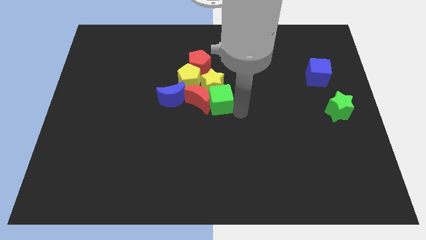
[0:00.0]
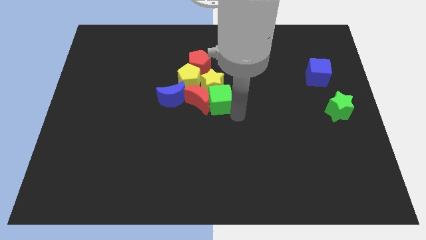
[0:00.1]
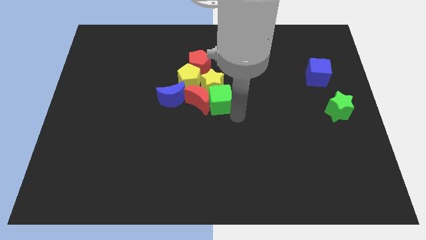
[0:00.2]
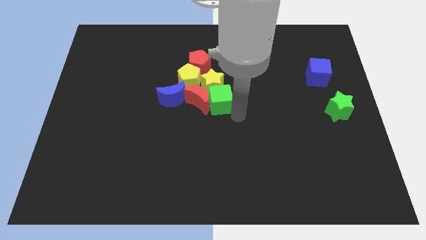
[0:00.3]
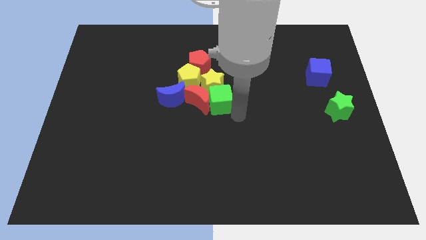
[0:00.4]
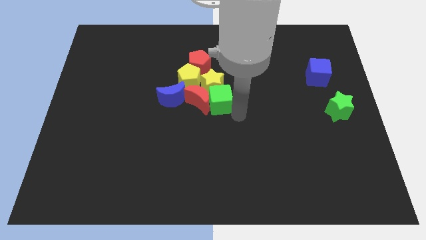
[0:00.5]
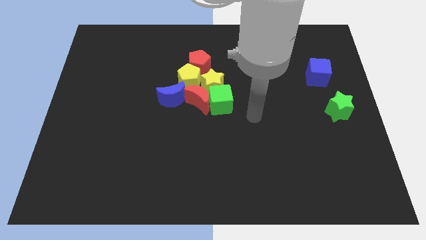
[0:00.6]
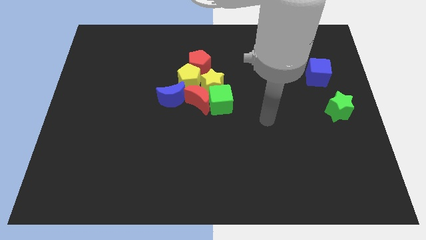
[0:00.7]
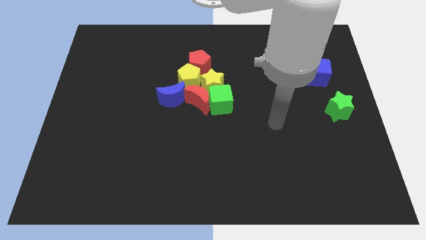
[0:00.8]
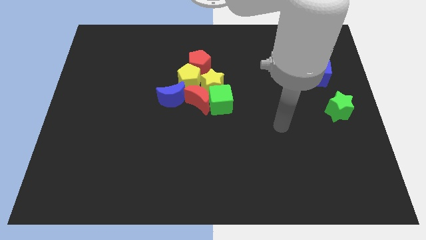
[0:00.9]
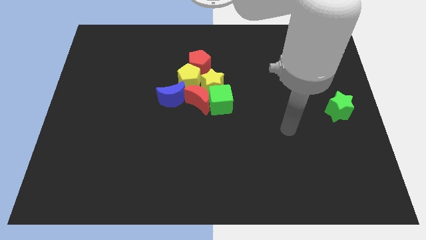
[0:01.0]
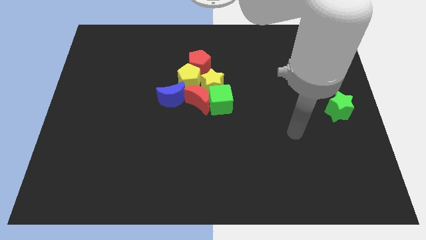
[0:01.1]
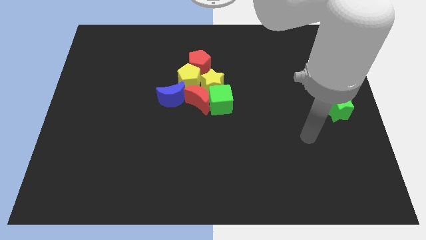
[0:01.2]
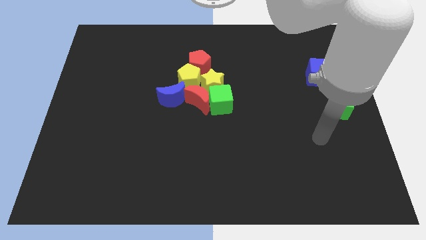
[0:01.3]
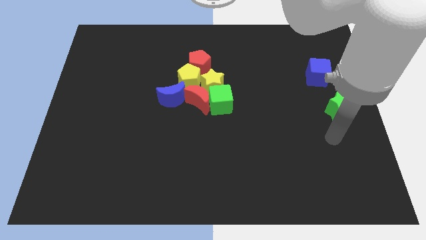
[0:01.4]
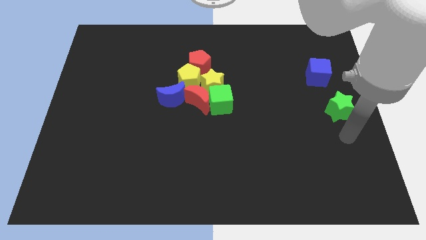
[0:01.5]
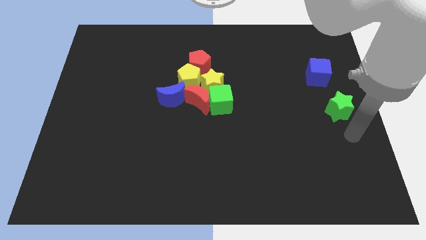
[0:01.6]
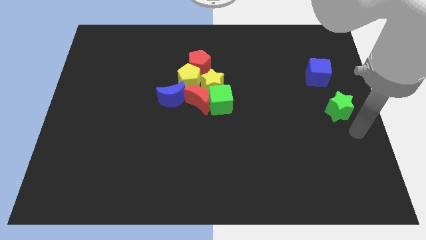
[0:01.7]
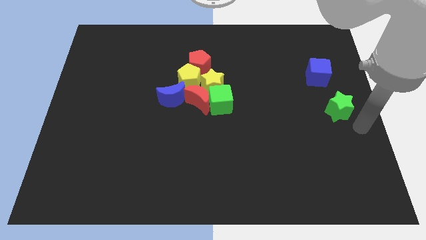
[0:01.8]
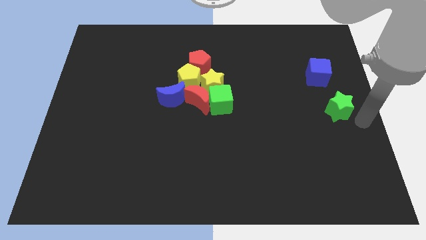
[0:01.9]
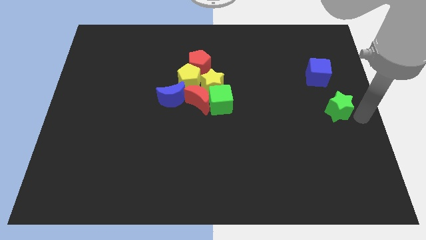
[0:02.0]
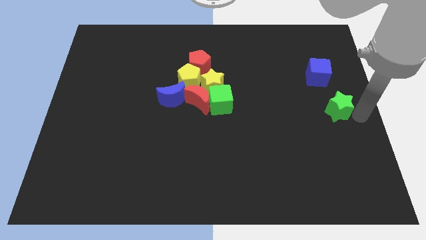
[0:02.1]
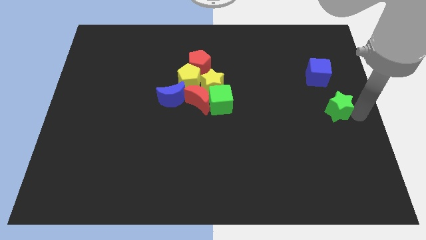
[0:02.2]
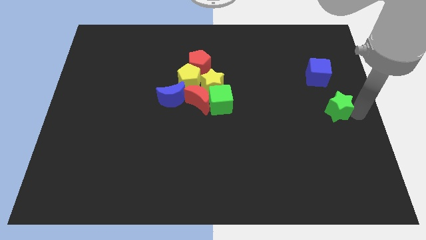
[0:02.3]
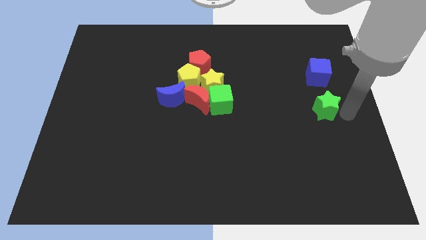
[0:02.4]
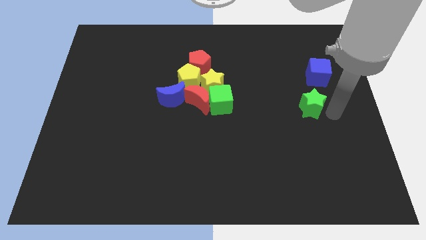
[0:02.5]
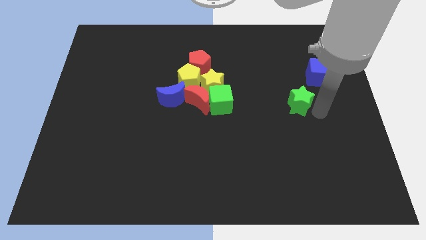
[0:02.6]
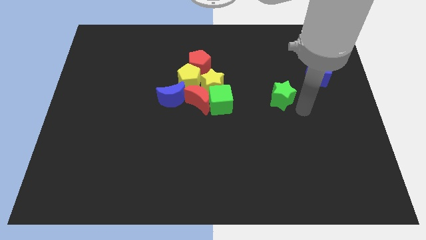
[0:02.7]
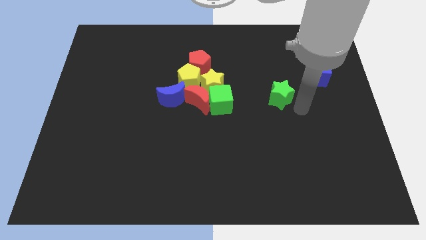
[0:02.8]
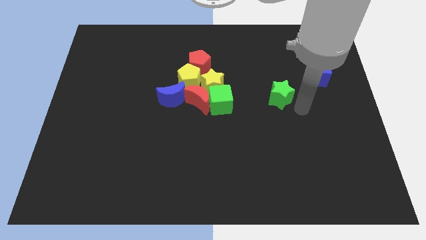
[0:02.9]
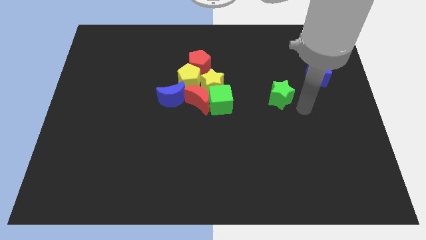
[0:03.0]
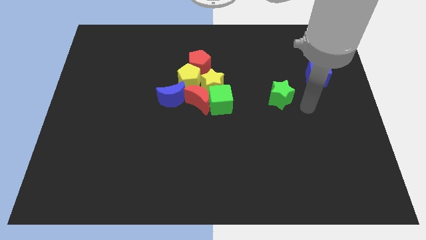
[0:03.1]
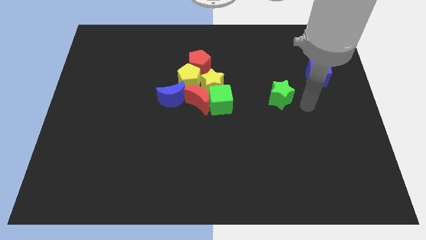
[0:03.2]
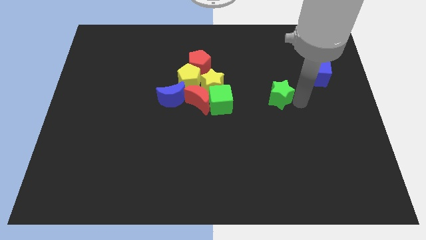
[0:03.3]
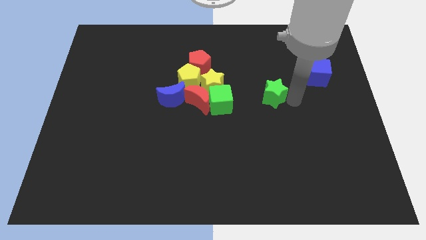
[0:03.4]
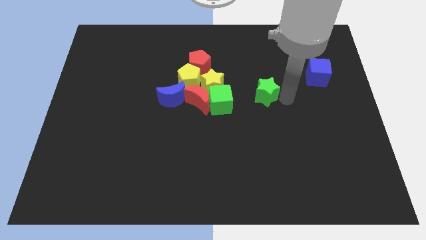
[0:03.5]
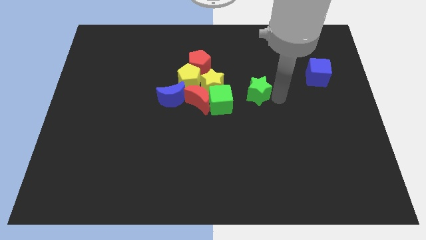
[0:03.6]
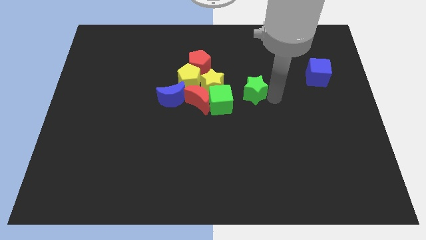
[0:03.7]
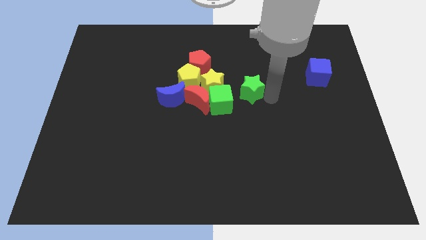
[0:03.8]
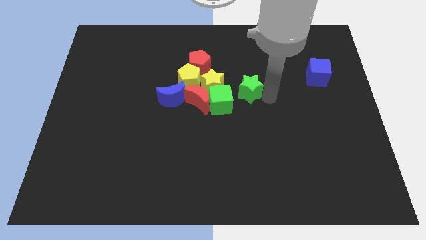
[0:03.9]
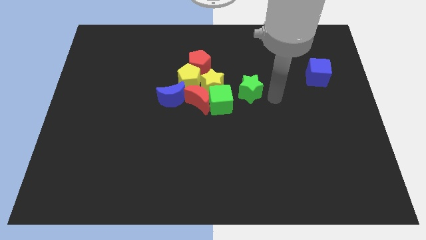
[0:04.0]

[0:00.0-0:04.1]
move green star towards the group of blocks to the center

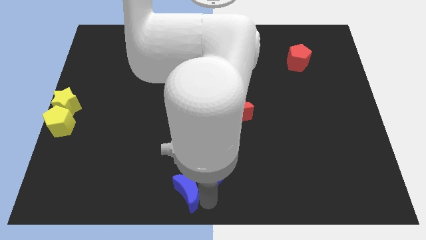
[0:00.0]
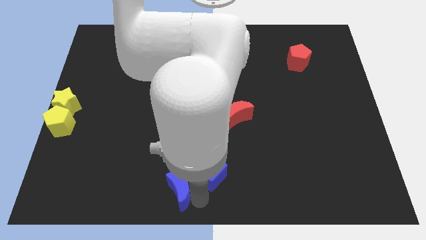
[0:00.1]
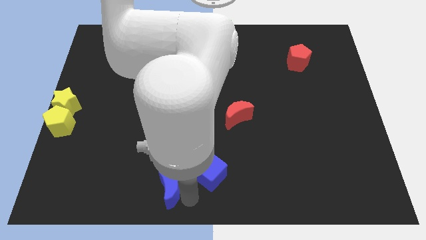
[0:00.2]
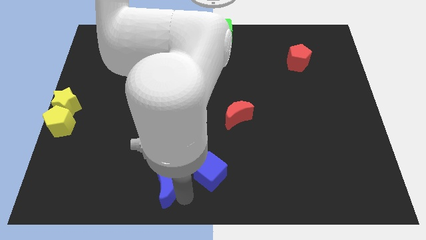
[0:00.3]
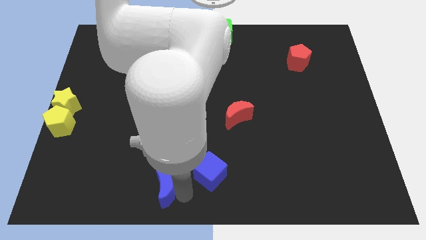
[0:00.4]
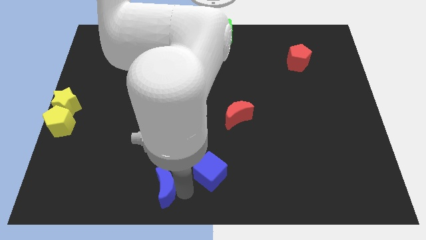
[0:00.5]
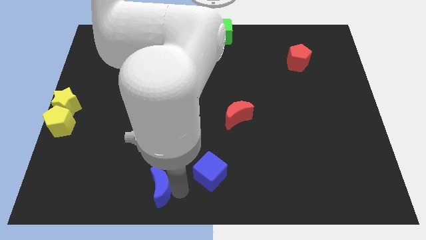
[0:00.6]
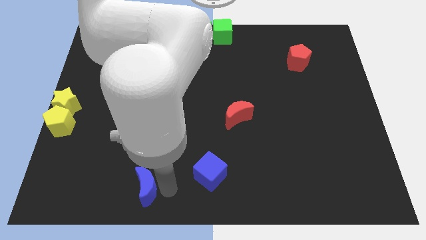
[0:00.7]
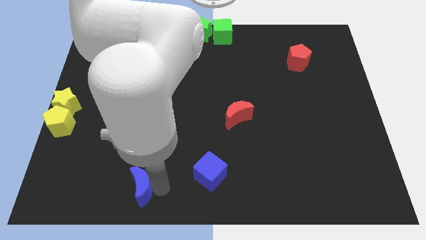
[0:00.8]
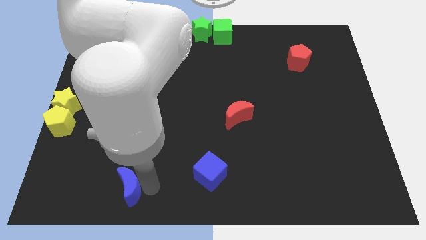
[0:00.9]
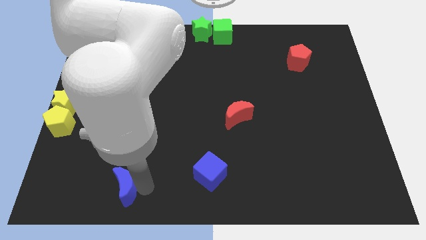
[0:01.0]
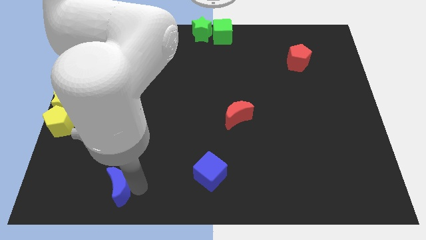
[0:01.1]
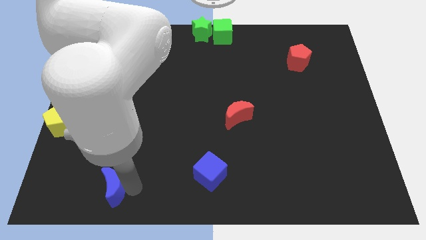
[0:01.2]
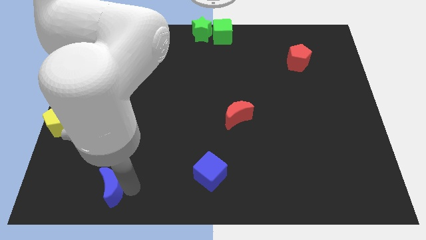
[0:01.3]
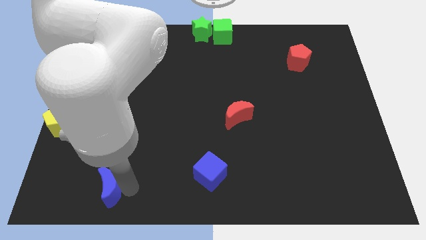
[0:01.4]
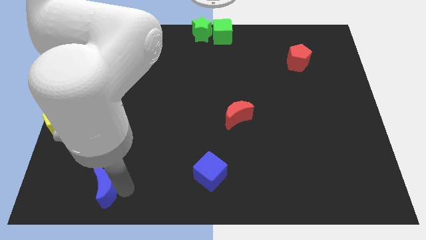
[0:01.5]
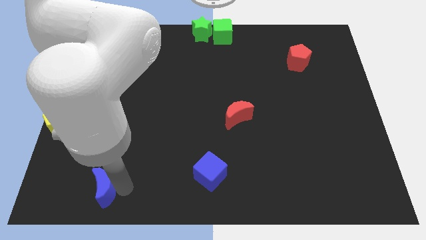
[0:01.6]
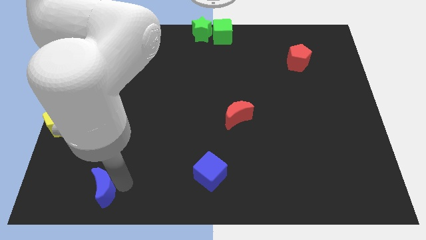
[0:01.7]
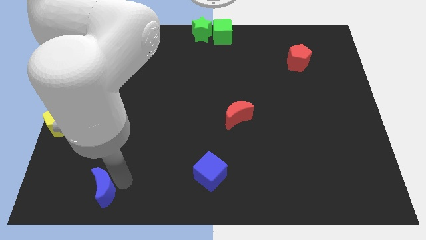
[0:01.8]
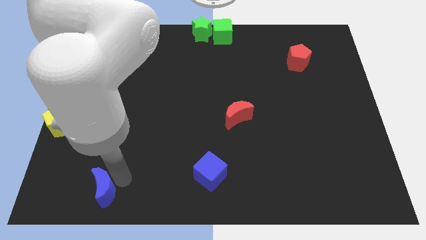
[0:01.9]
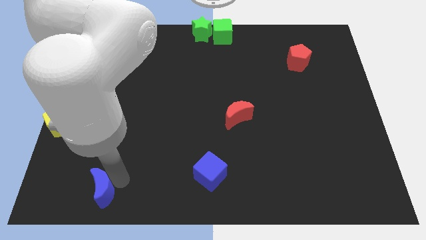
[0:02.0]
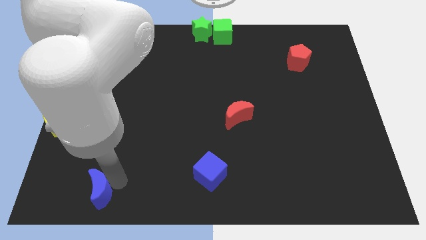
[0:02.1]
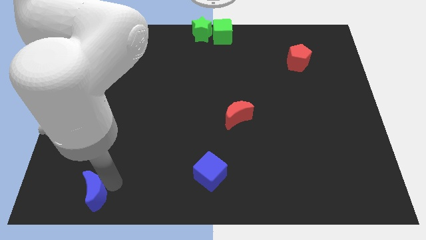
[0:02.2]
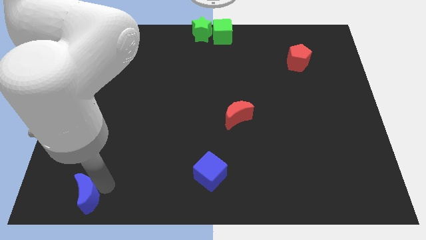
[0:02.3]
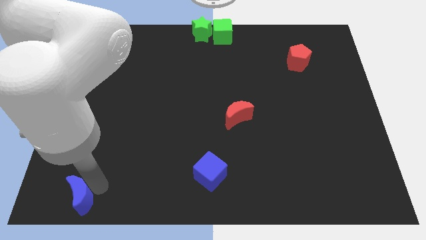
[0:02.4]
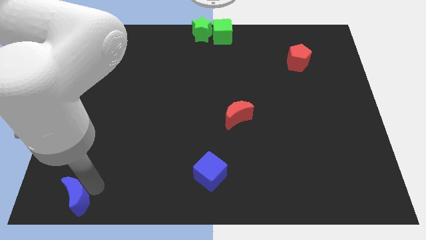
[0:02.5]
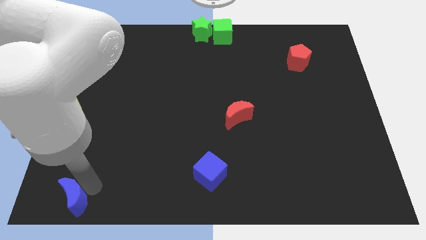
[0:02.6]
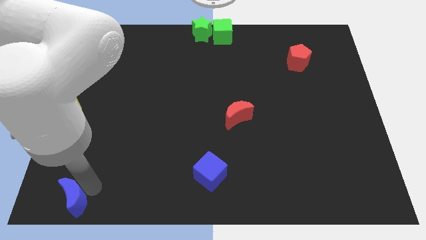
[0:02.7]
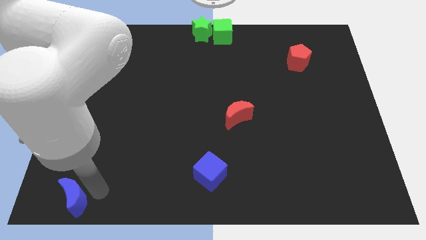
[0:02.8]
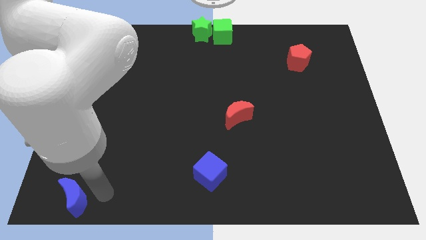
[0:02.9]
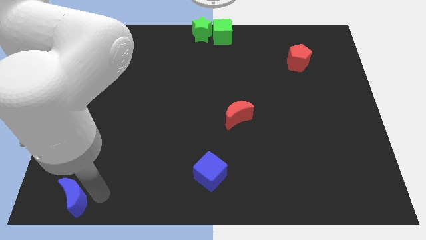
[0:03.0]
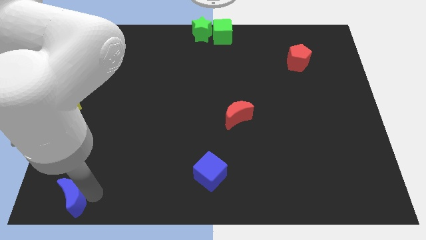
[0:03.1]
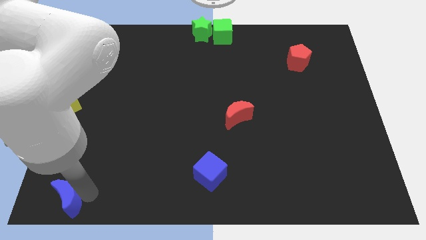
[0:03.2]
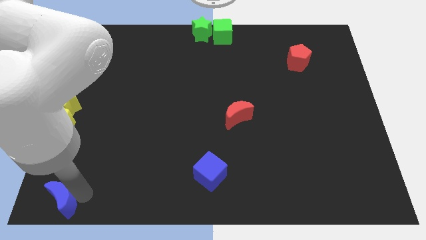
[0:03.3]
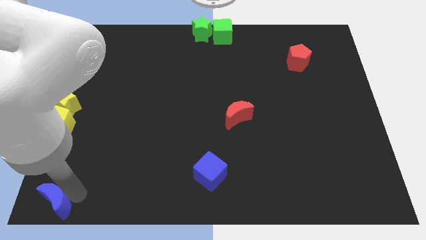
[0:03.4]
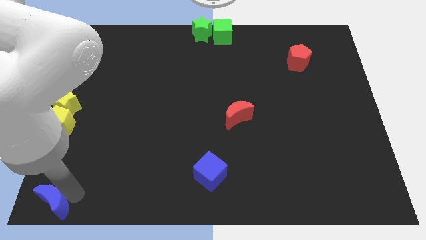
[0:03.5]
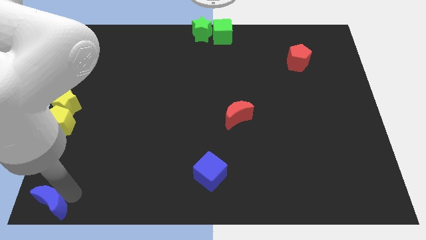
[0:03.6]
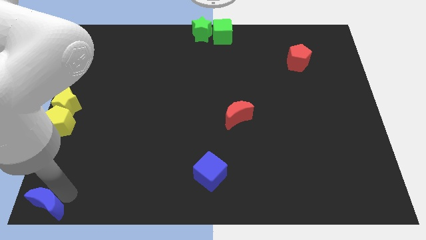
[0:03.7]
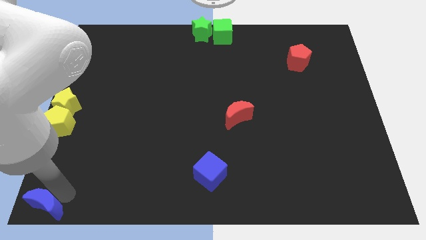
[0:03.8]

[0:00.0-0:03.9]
push the blue crescent to the bottom left to the board

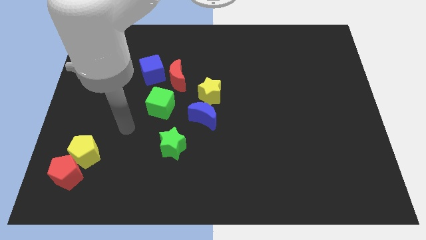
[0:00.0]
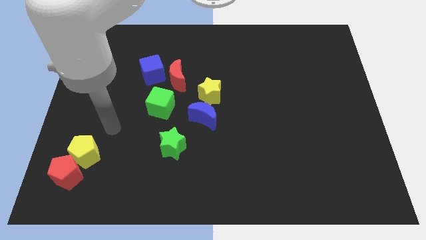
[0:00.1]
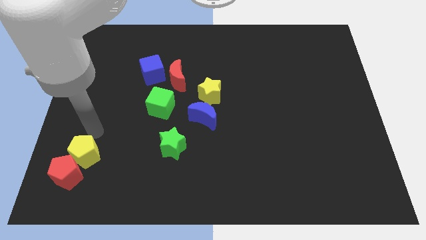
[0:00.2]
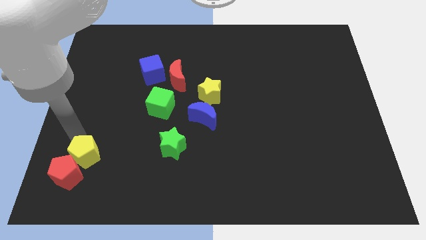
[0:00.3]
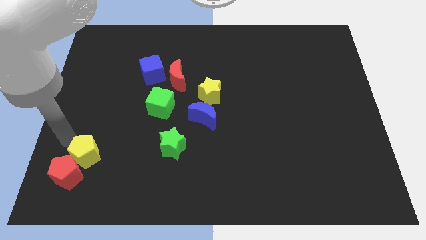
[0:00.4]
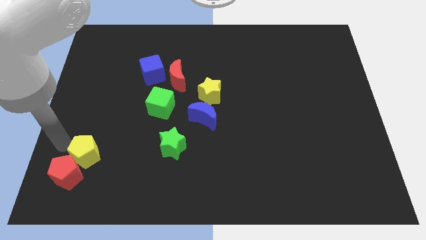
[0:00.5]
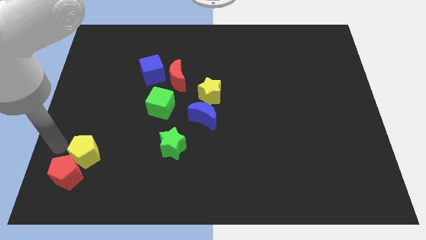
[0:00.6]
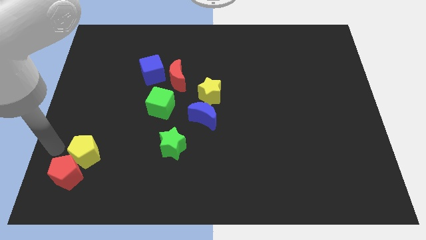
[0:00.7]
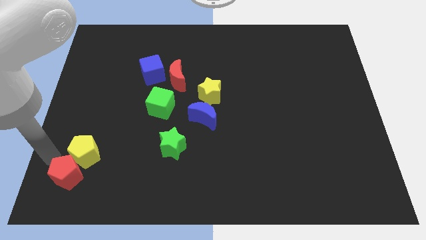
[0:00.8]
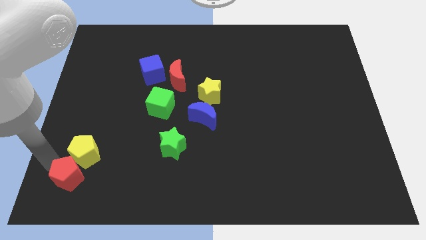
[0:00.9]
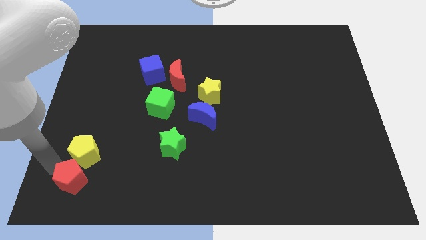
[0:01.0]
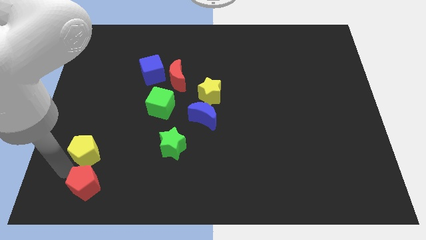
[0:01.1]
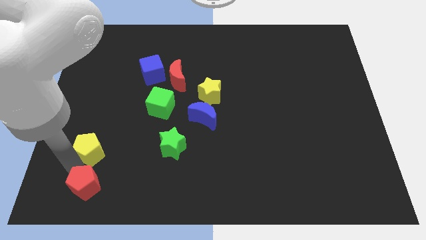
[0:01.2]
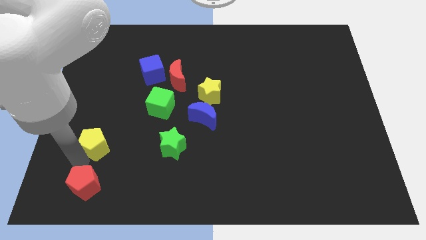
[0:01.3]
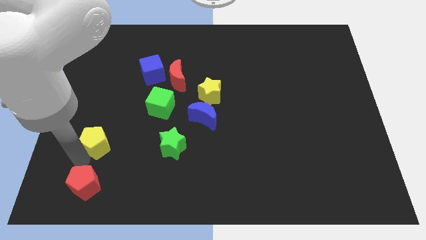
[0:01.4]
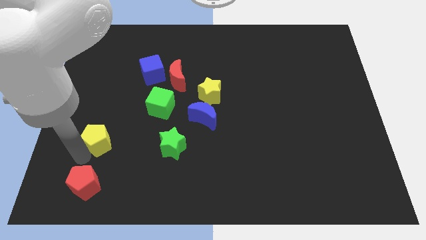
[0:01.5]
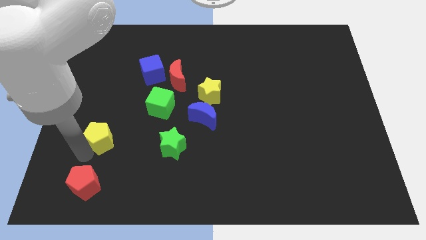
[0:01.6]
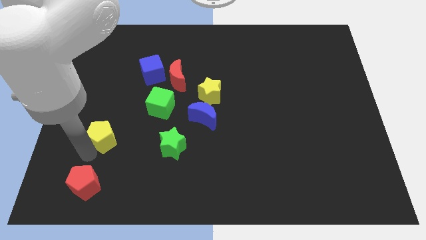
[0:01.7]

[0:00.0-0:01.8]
separate the yellow pentagon from the red pentagon
